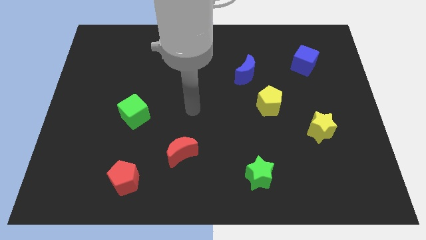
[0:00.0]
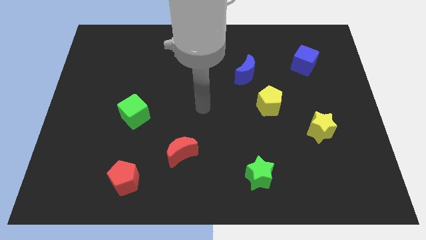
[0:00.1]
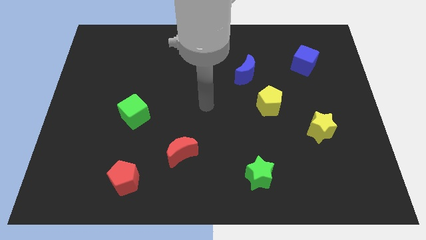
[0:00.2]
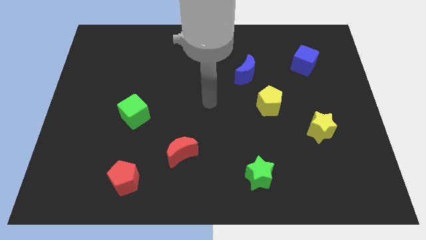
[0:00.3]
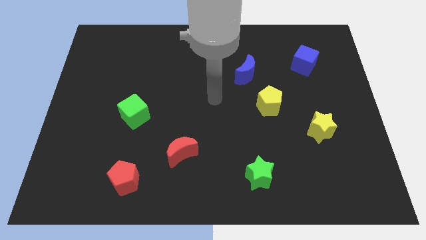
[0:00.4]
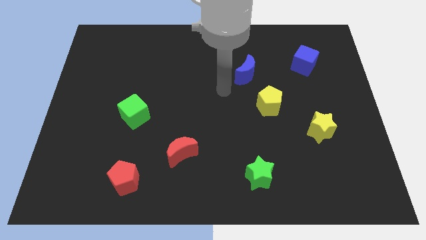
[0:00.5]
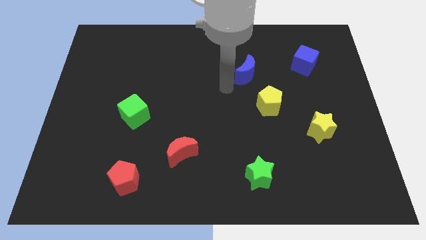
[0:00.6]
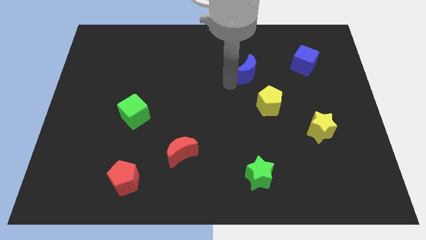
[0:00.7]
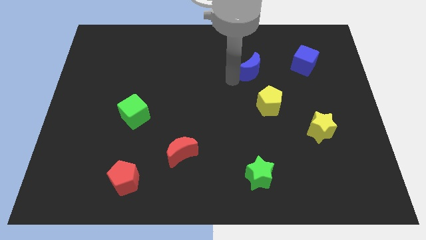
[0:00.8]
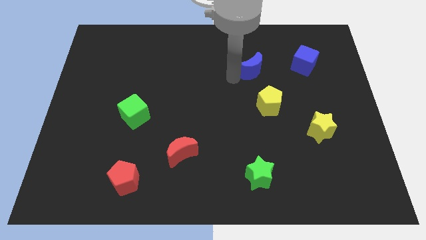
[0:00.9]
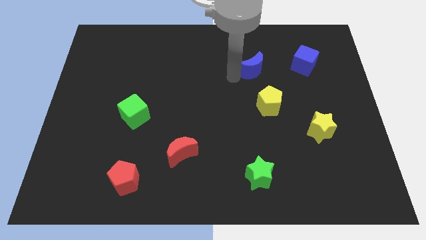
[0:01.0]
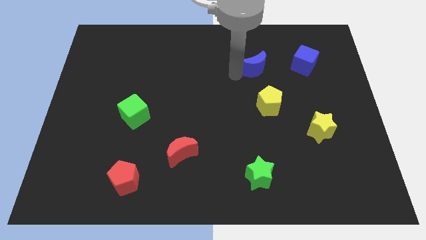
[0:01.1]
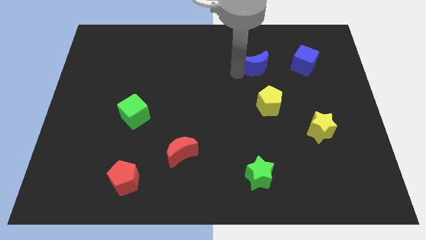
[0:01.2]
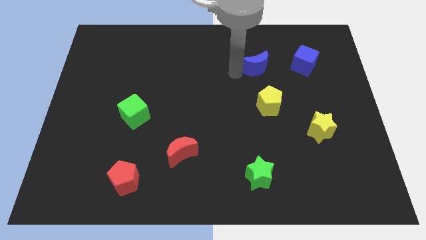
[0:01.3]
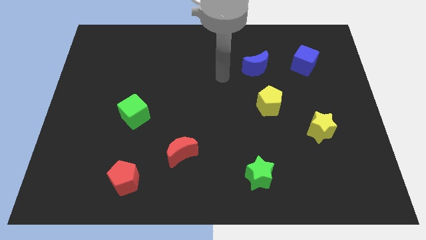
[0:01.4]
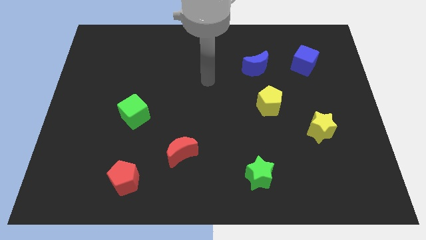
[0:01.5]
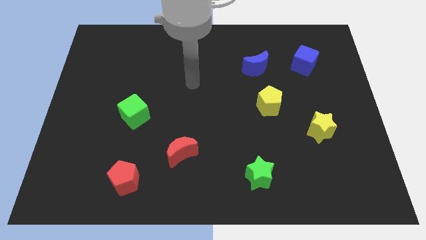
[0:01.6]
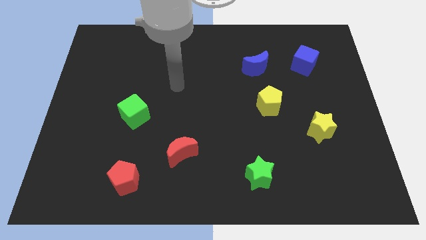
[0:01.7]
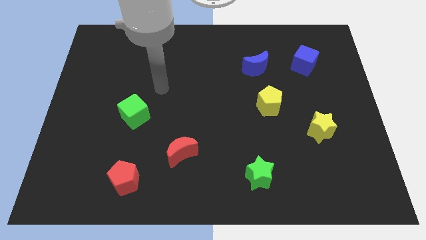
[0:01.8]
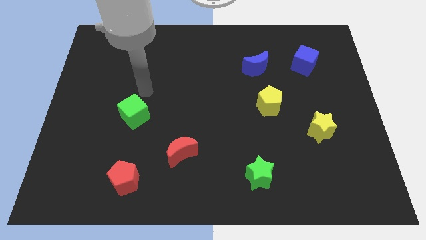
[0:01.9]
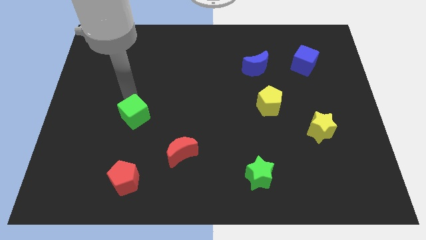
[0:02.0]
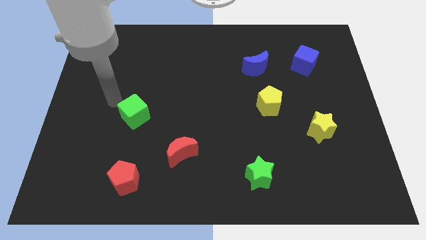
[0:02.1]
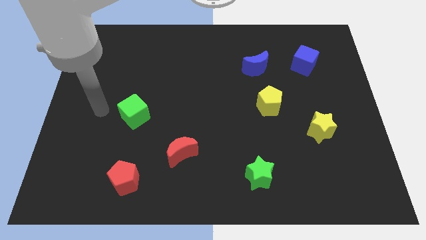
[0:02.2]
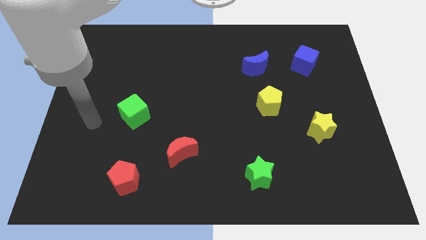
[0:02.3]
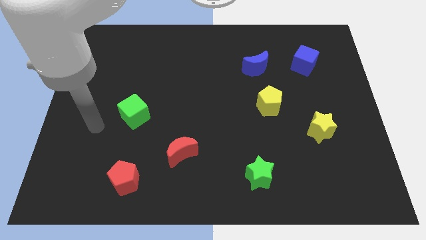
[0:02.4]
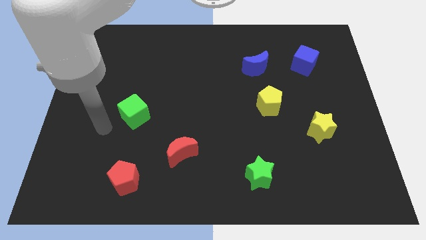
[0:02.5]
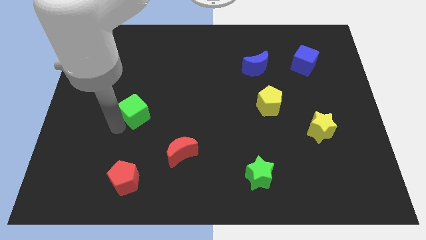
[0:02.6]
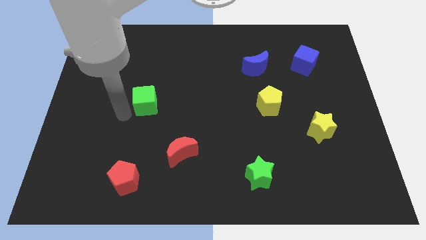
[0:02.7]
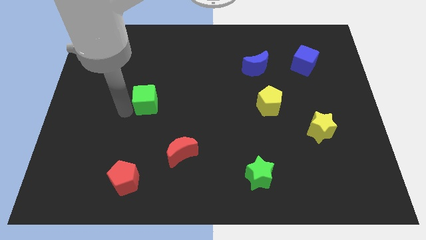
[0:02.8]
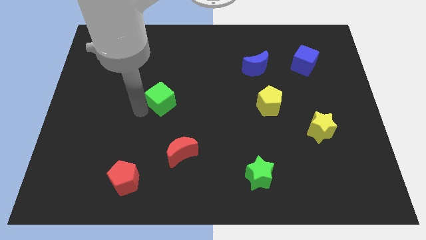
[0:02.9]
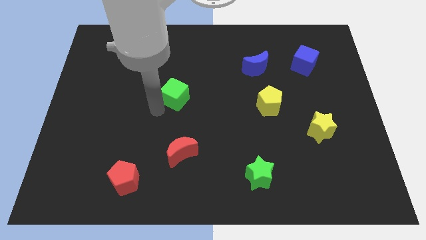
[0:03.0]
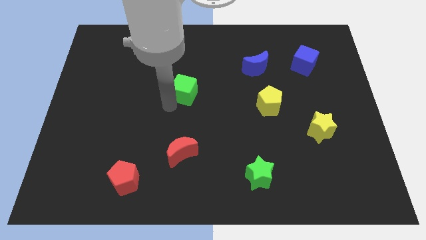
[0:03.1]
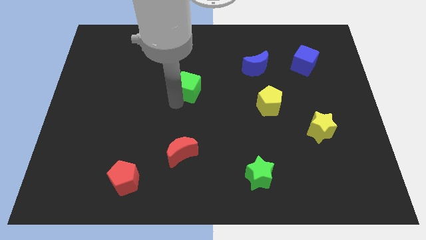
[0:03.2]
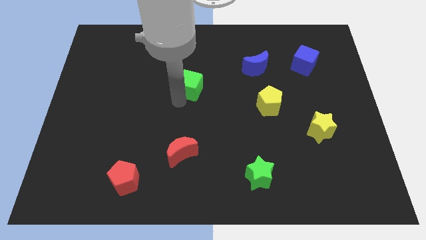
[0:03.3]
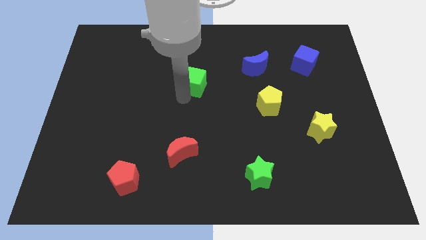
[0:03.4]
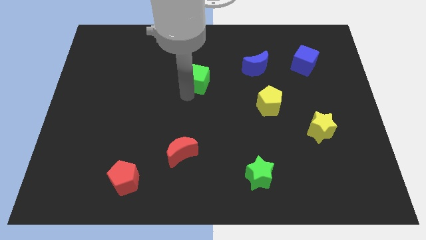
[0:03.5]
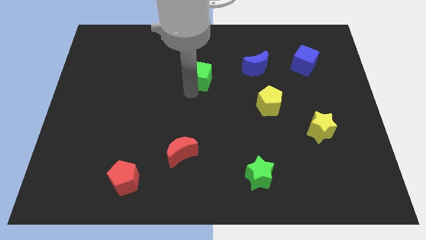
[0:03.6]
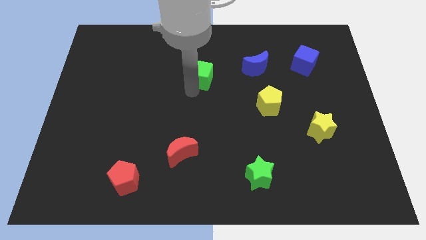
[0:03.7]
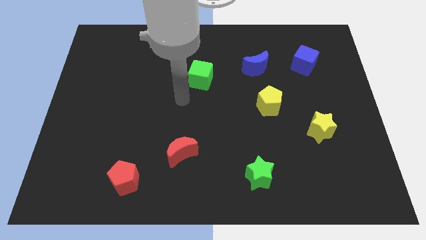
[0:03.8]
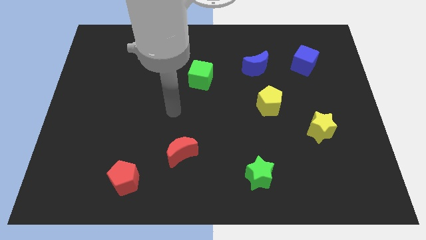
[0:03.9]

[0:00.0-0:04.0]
move the blue crescent and green cube diagonally on the bottom left side of the blue cube

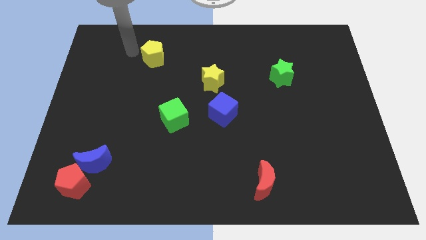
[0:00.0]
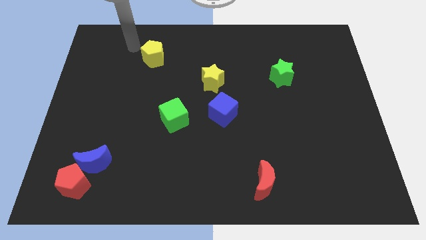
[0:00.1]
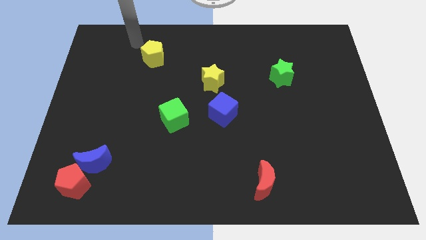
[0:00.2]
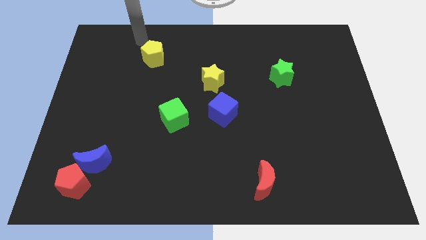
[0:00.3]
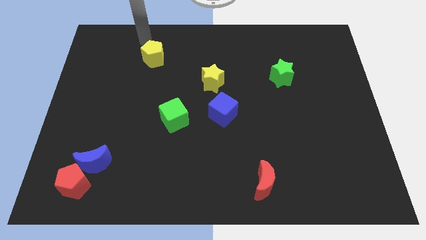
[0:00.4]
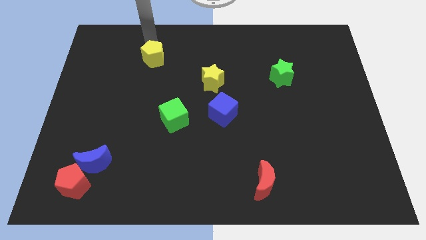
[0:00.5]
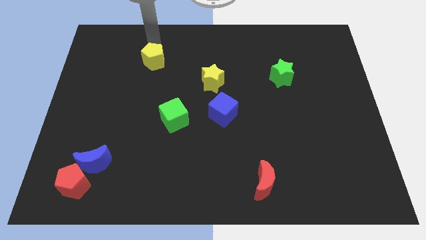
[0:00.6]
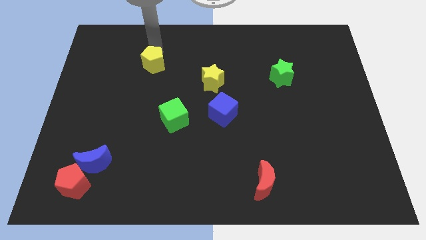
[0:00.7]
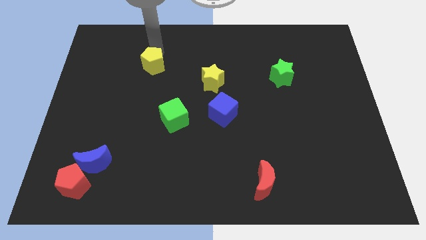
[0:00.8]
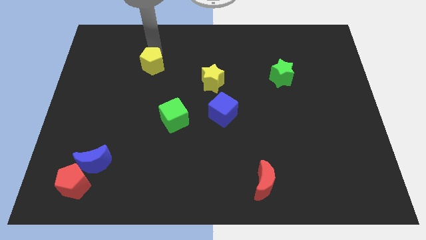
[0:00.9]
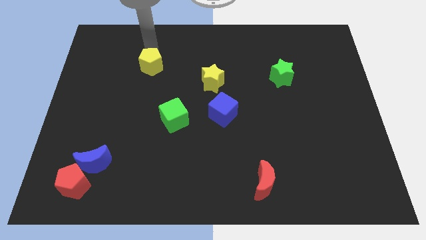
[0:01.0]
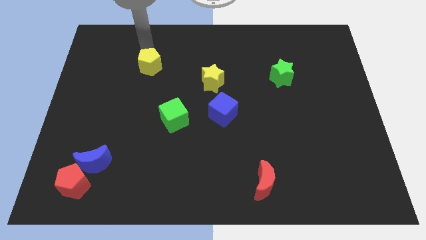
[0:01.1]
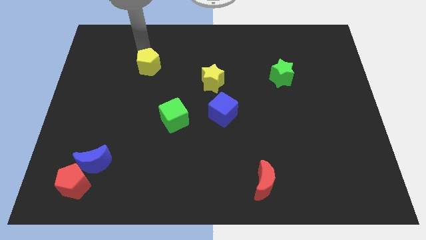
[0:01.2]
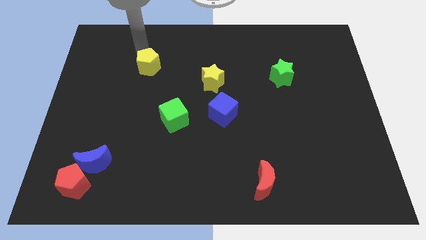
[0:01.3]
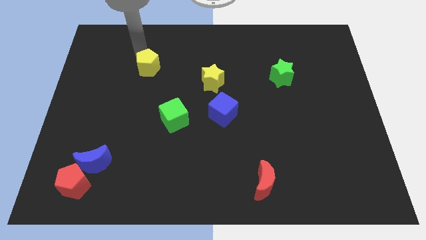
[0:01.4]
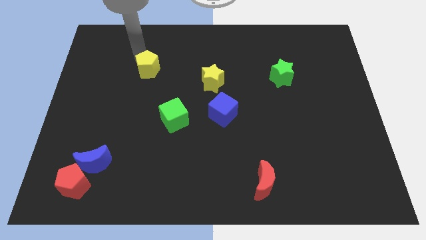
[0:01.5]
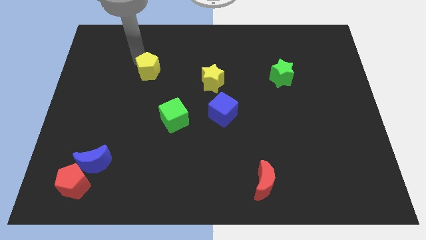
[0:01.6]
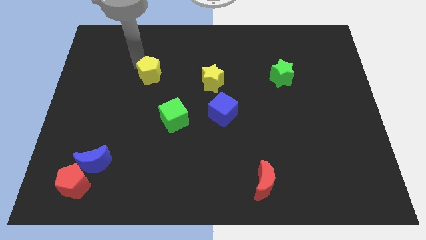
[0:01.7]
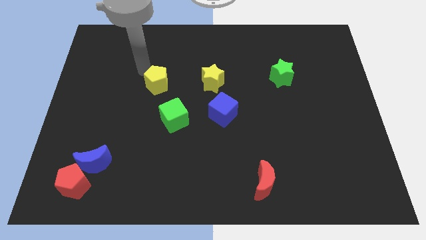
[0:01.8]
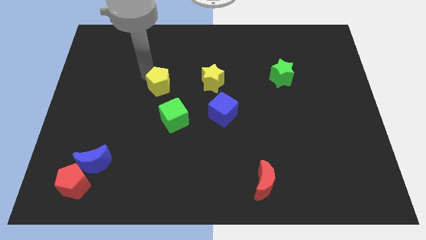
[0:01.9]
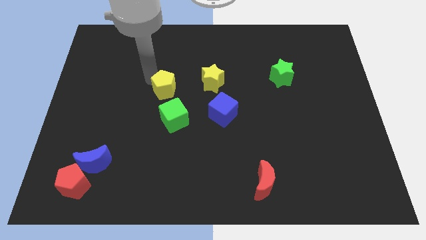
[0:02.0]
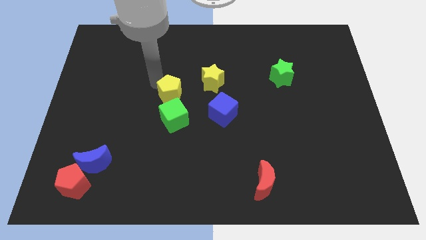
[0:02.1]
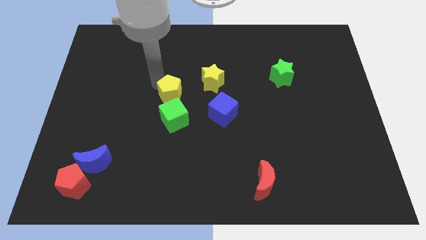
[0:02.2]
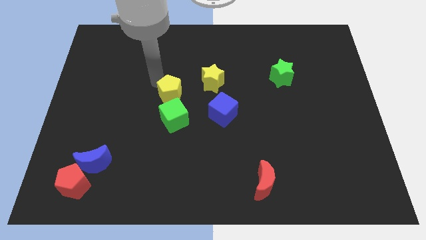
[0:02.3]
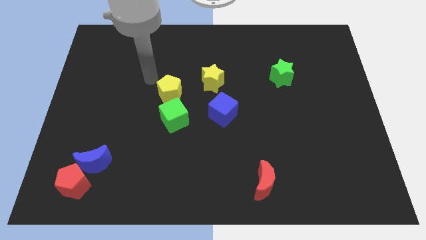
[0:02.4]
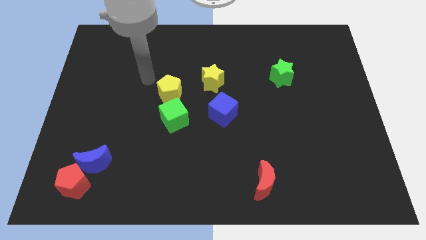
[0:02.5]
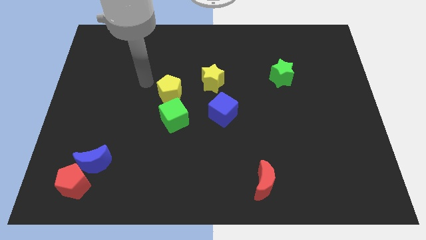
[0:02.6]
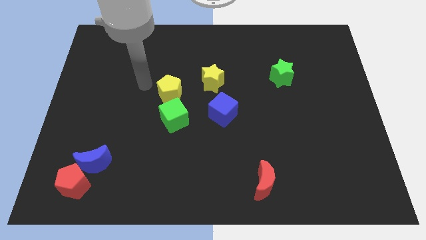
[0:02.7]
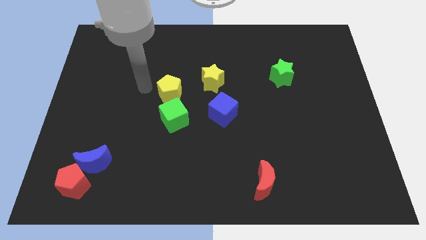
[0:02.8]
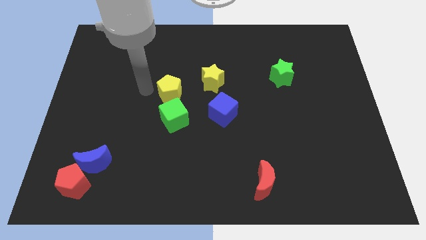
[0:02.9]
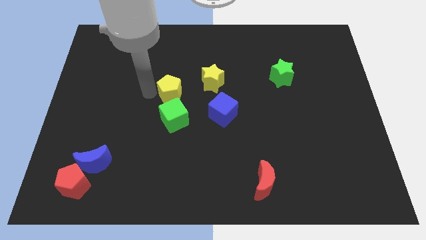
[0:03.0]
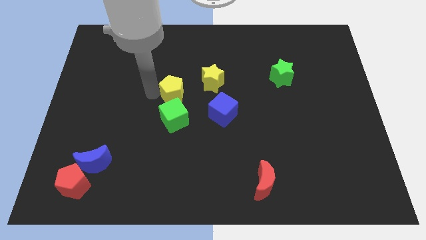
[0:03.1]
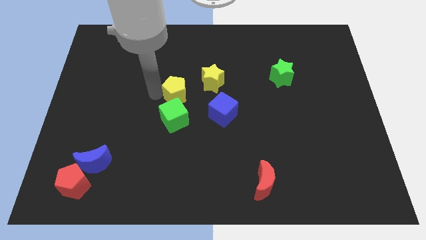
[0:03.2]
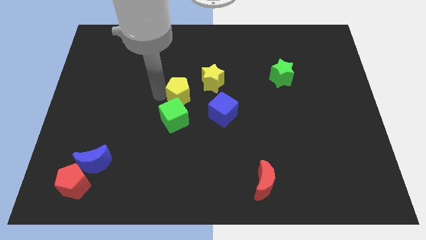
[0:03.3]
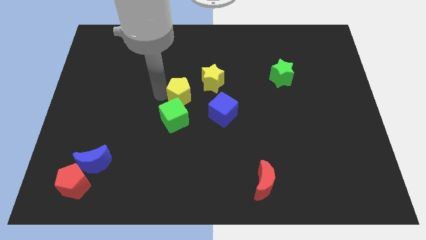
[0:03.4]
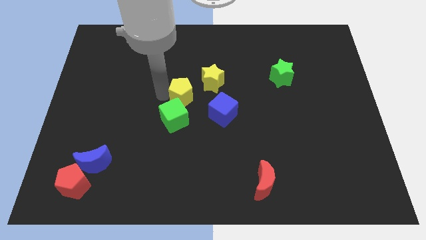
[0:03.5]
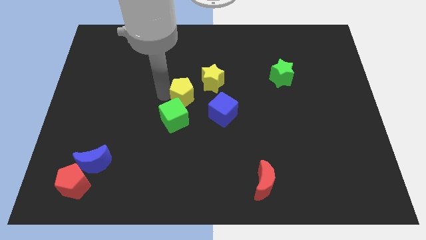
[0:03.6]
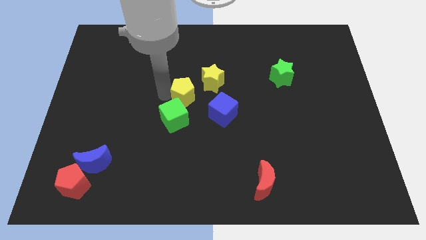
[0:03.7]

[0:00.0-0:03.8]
push yellow pentagon towards green cube

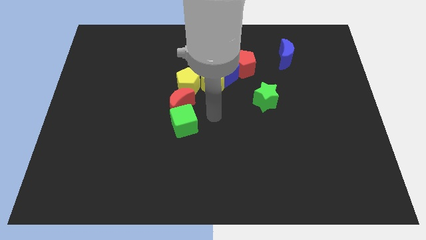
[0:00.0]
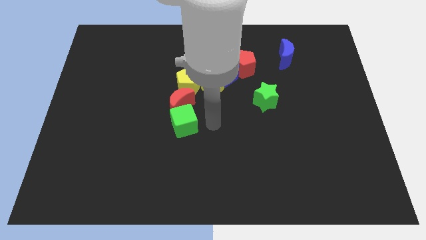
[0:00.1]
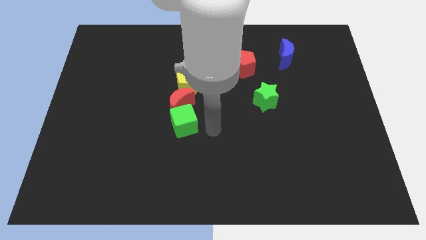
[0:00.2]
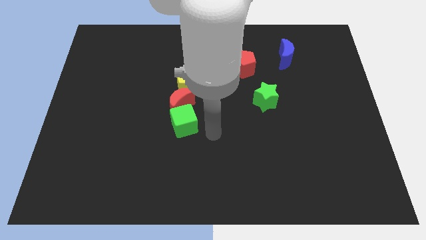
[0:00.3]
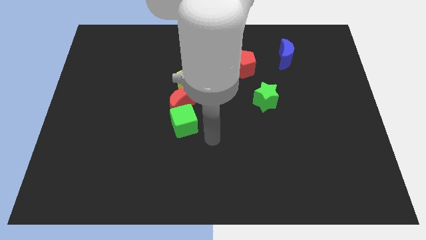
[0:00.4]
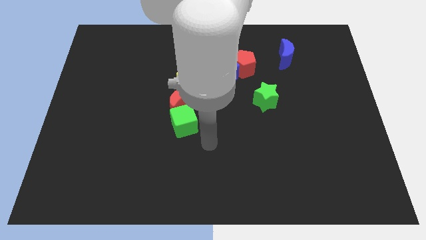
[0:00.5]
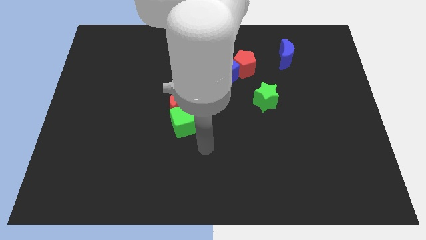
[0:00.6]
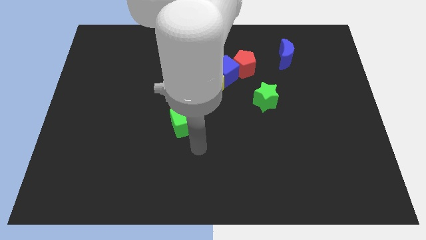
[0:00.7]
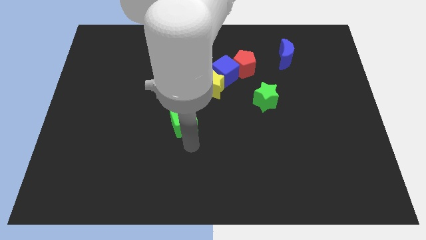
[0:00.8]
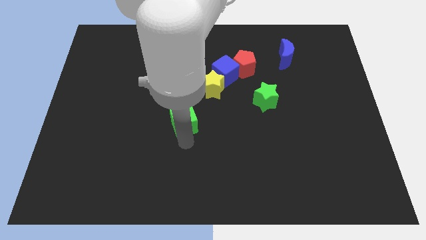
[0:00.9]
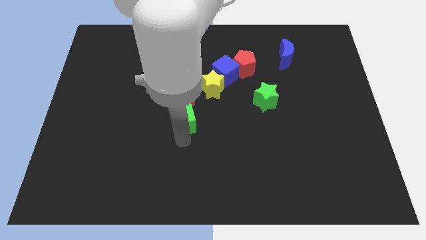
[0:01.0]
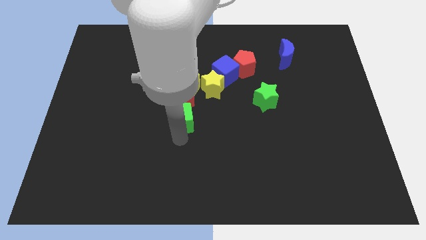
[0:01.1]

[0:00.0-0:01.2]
place the arm below to the green cube
